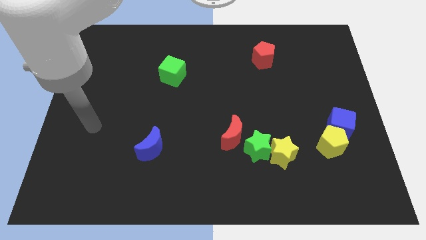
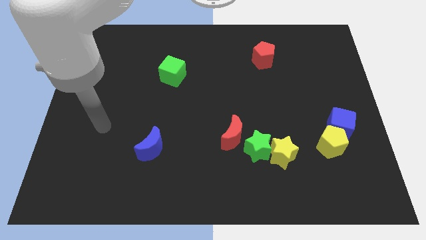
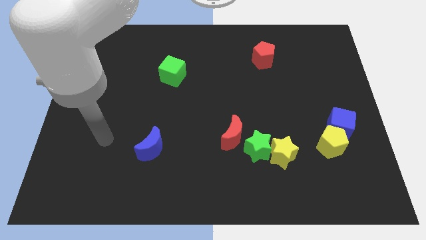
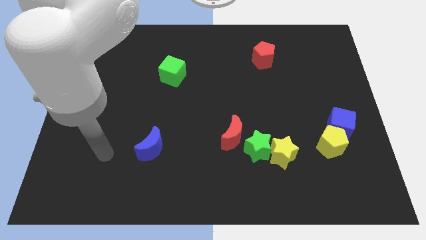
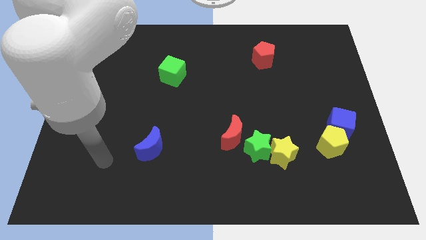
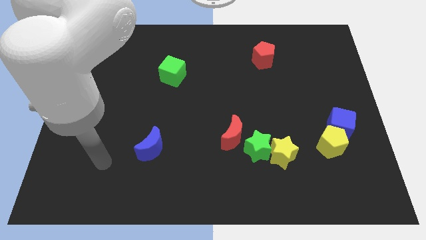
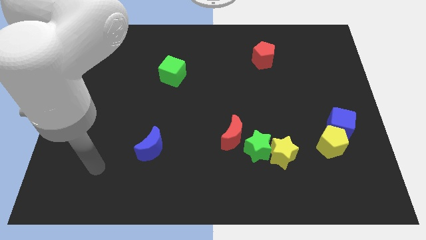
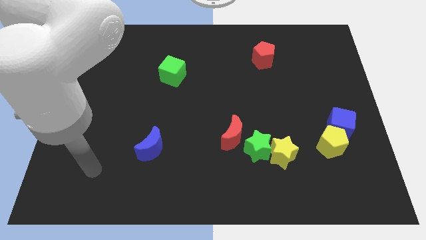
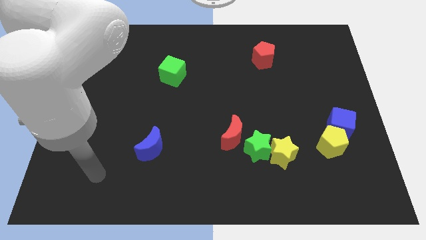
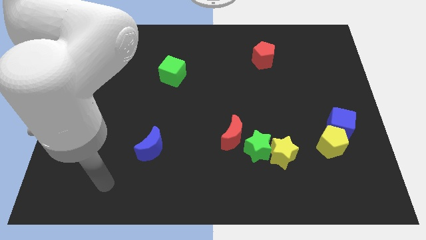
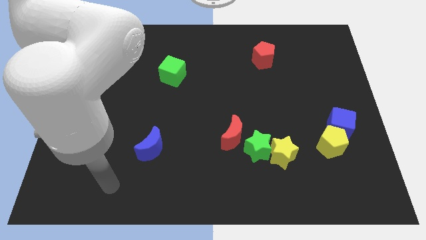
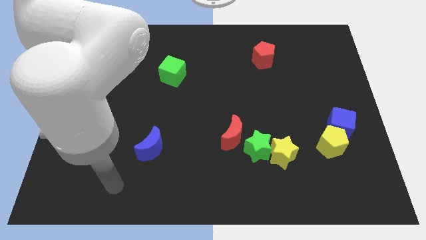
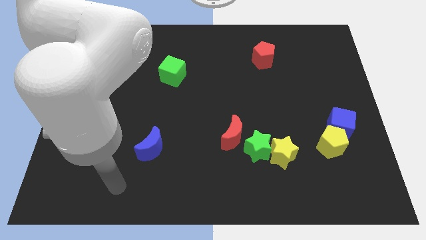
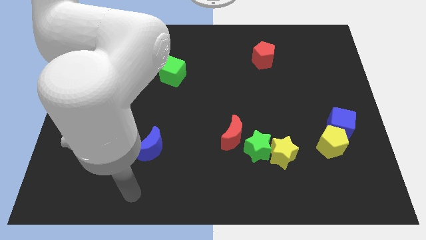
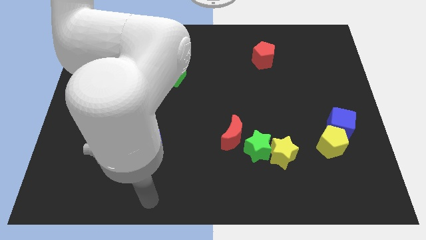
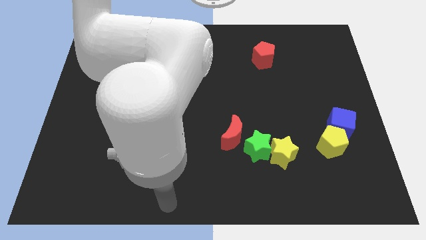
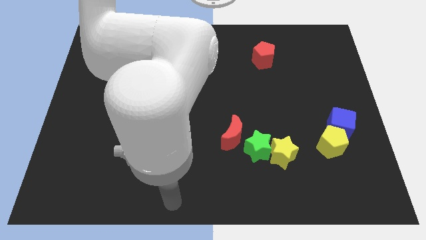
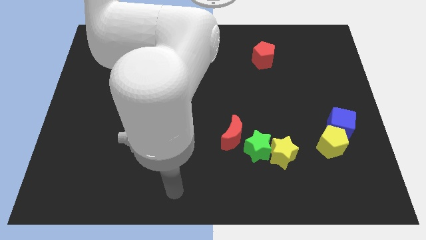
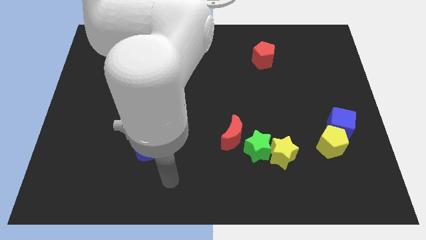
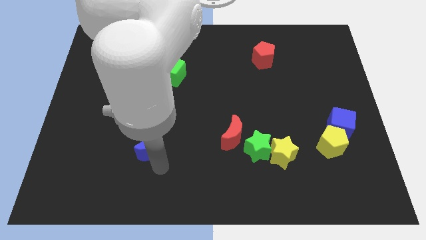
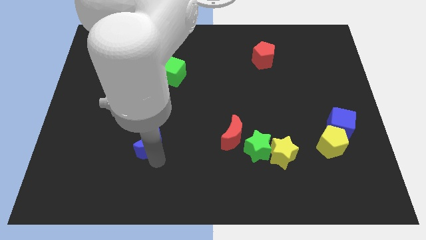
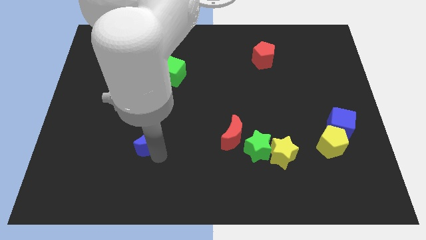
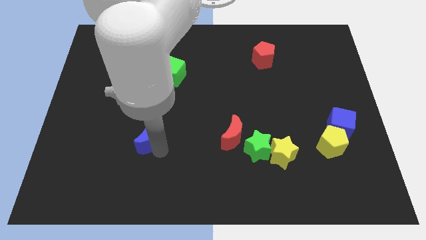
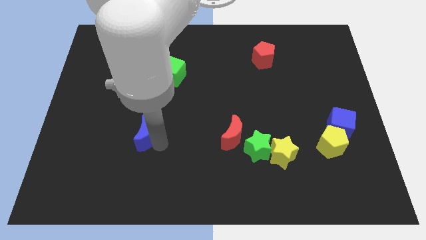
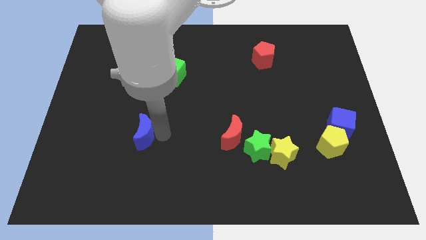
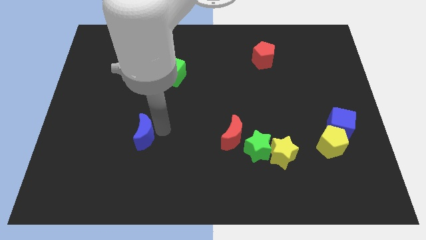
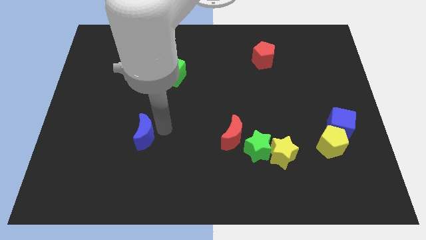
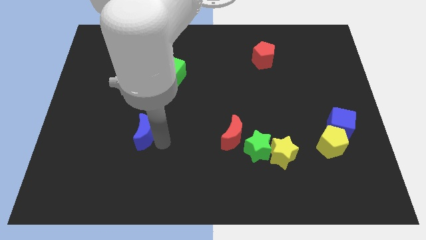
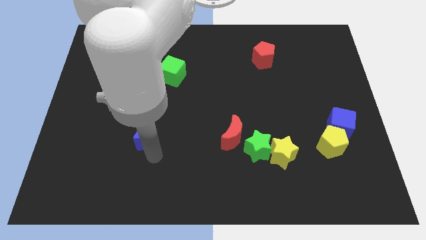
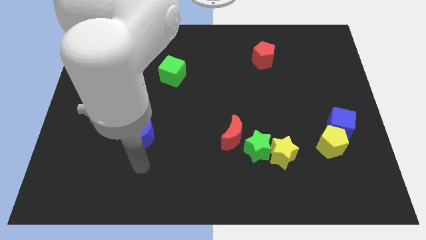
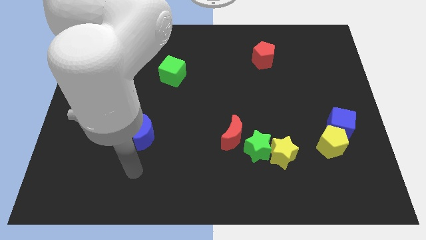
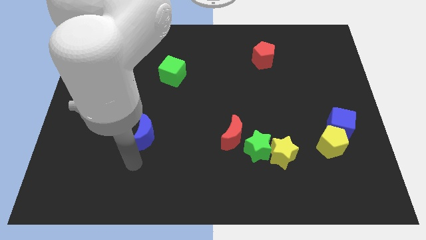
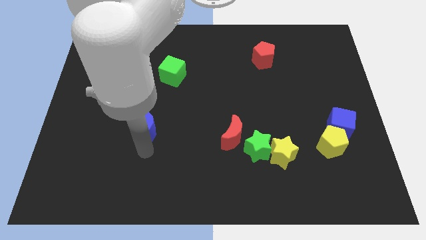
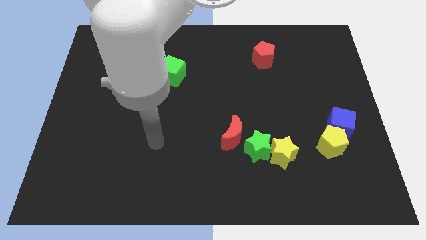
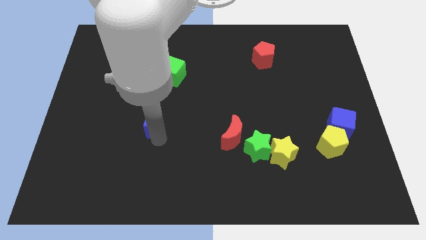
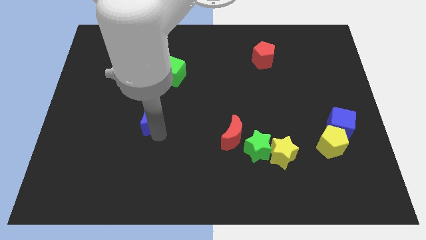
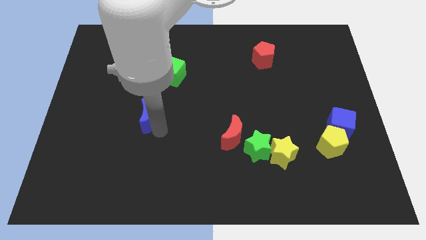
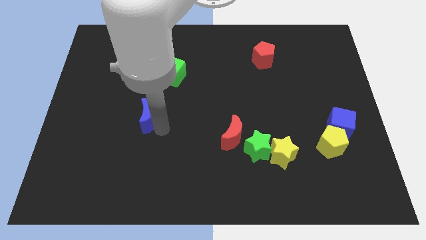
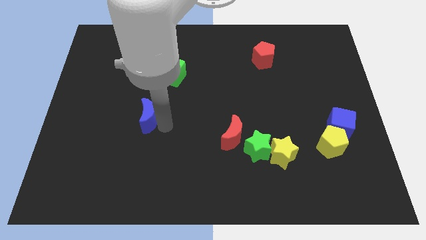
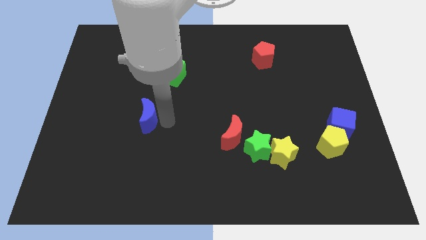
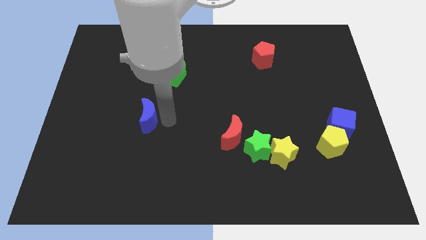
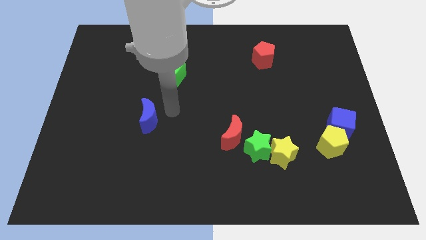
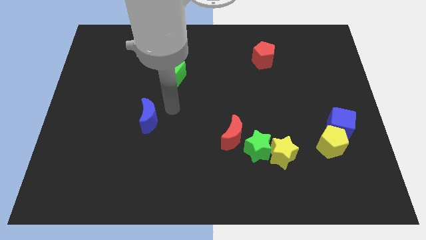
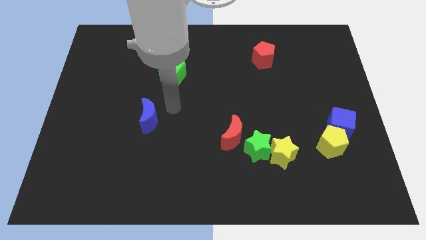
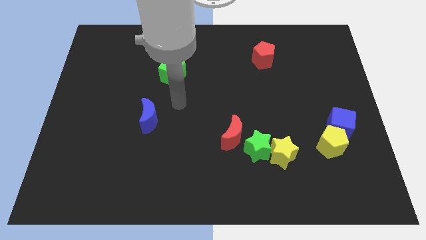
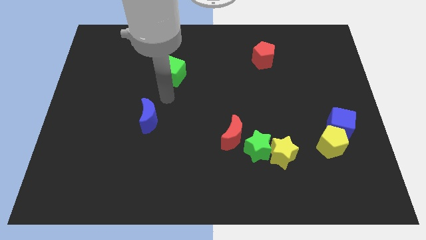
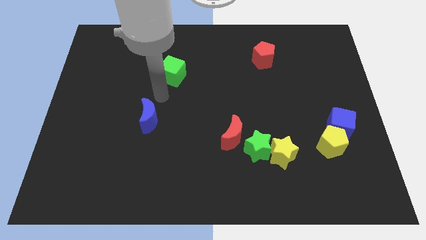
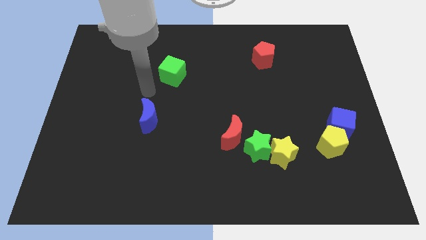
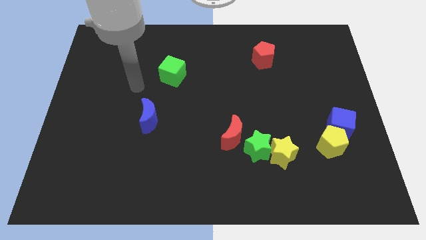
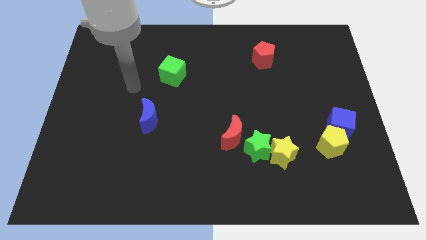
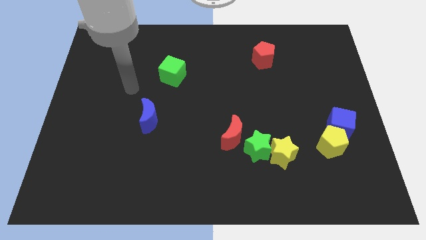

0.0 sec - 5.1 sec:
move the blue moon towards the center of the board

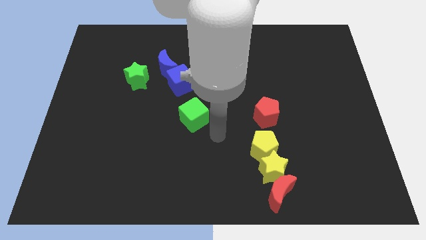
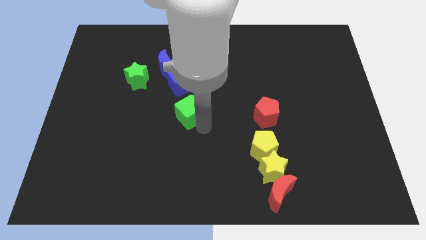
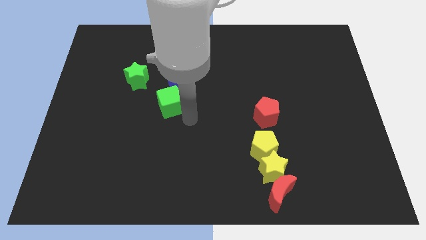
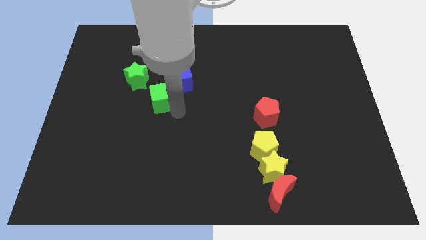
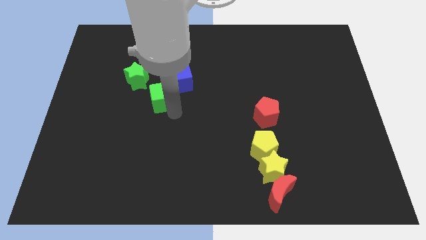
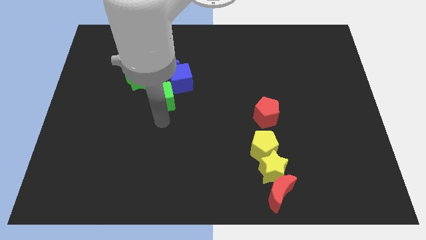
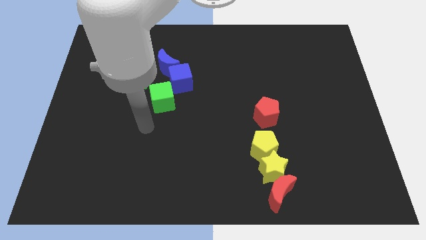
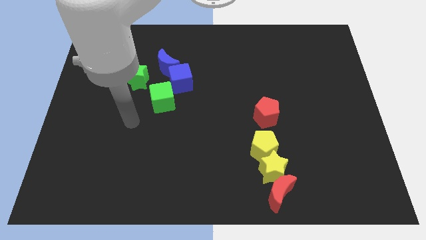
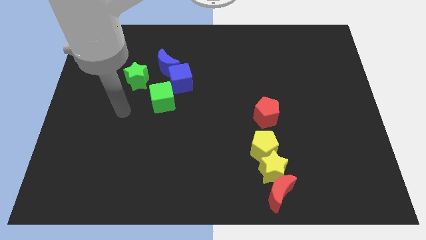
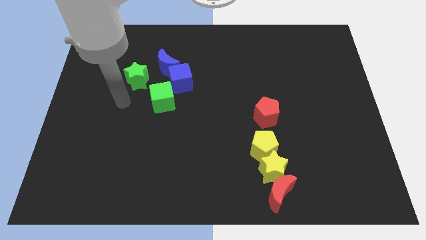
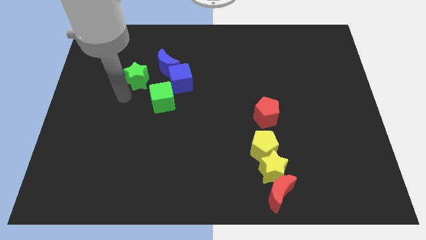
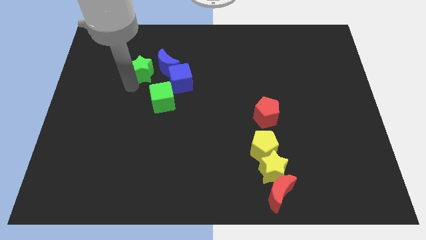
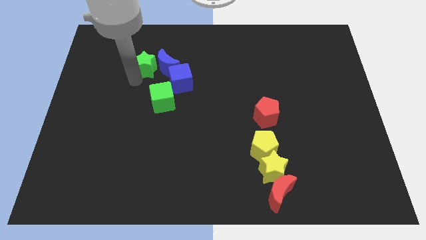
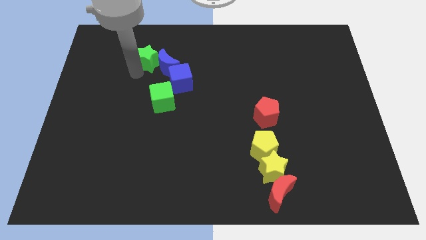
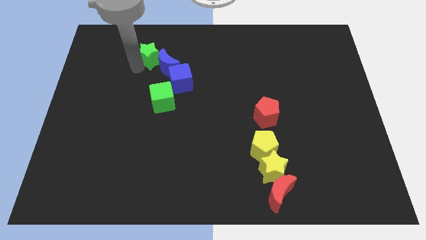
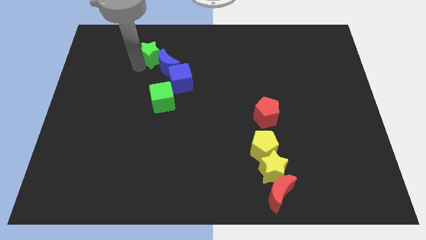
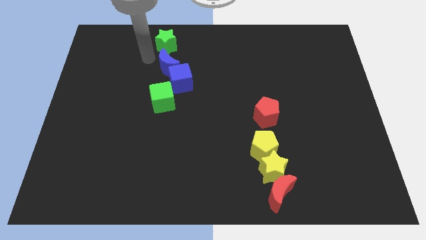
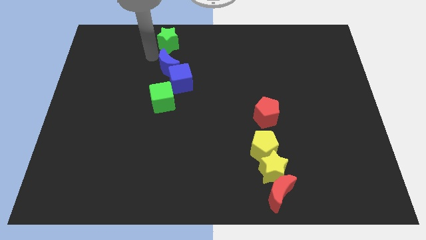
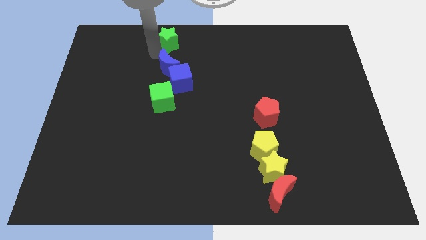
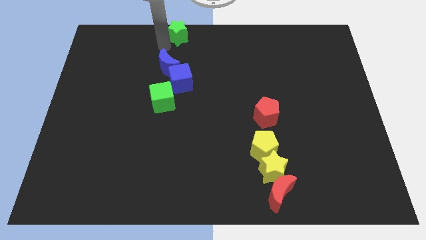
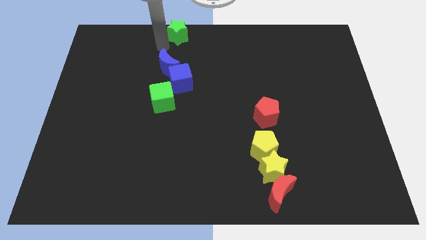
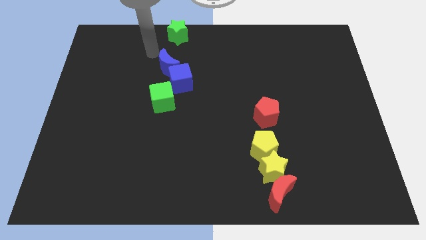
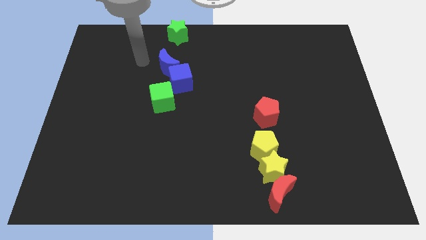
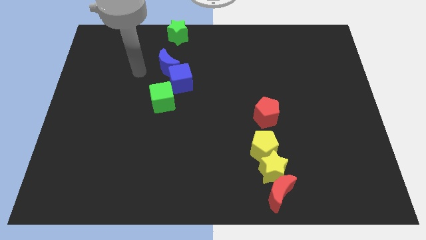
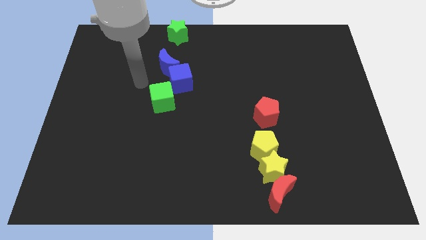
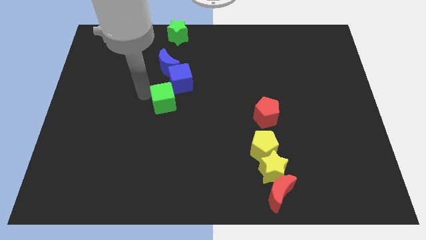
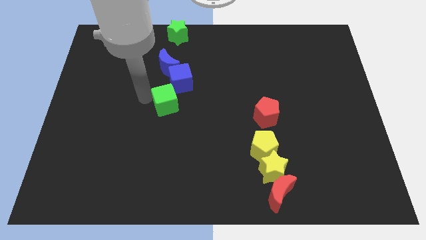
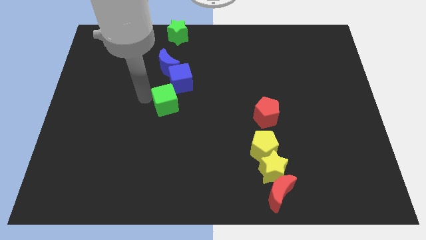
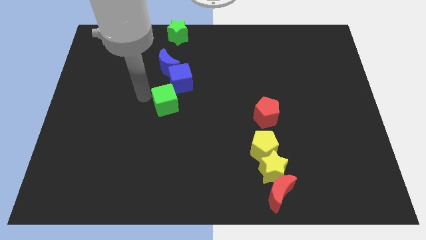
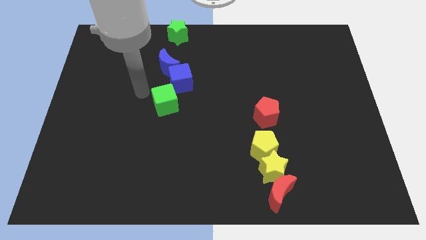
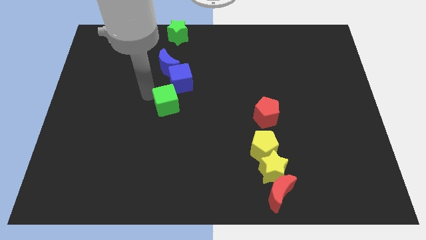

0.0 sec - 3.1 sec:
move the green star to the top center of the board

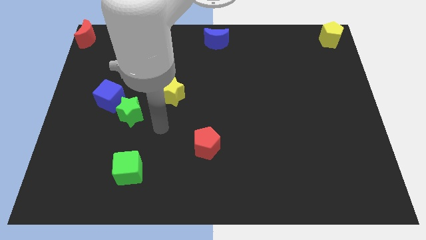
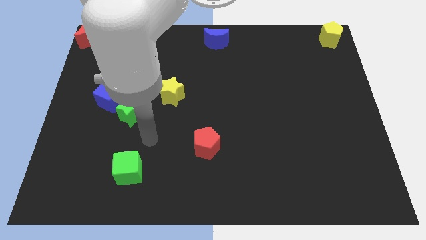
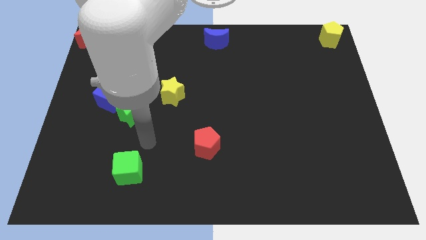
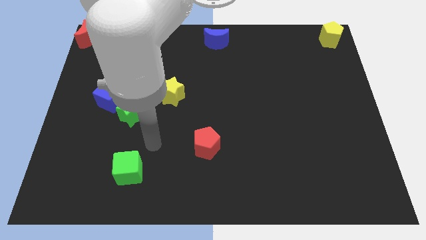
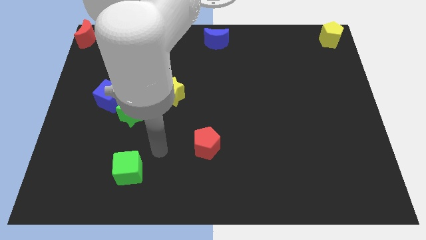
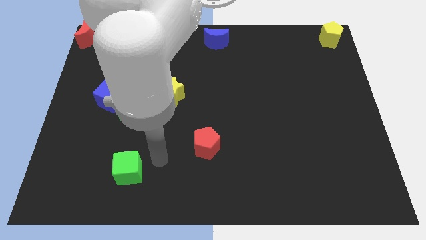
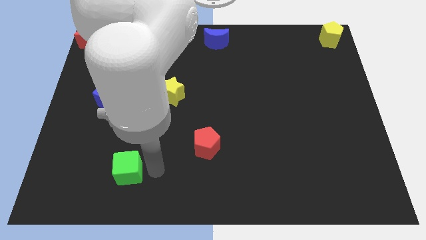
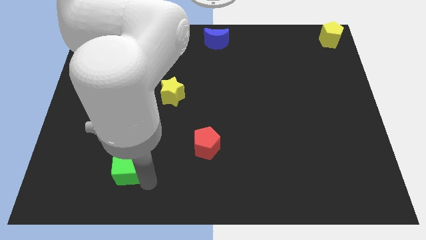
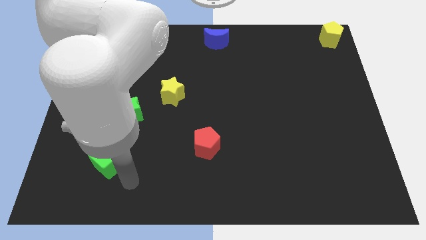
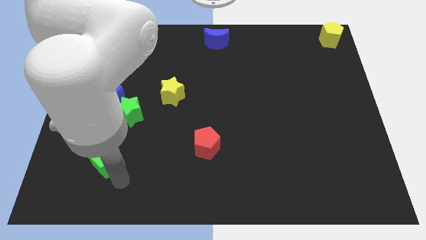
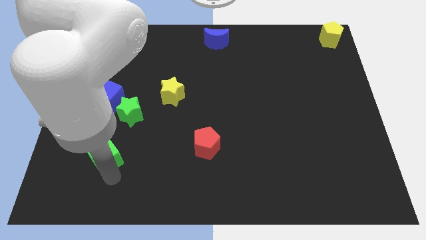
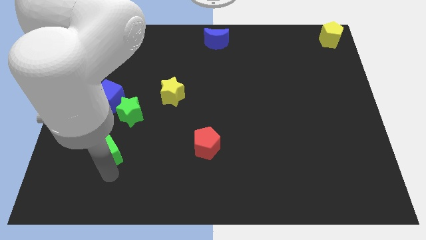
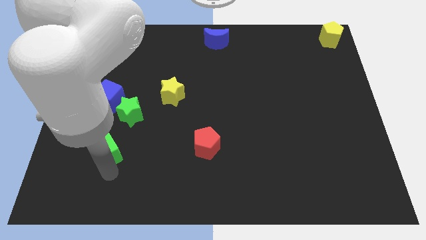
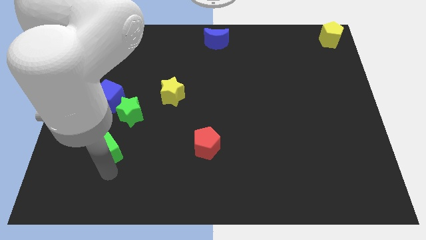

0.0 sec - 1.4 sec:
place the green cube below the green star
